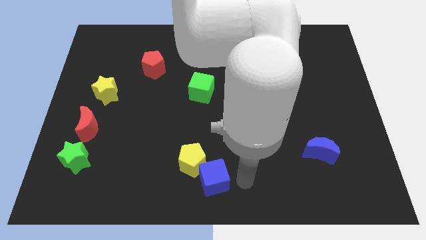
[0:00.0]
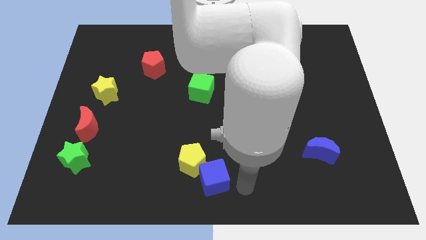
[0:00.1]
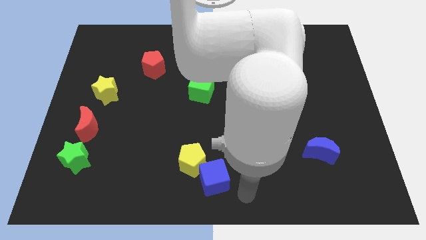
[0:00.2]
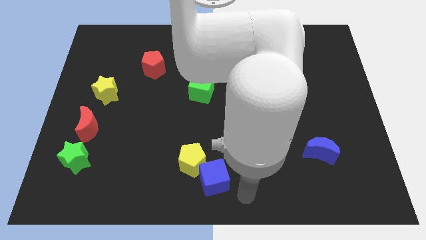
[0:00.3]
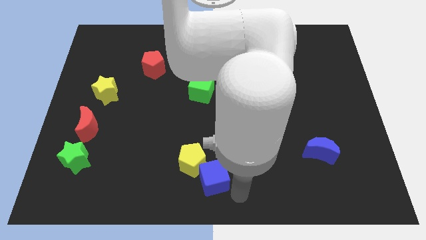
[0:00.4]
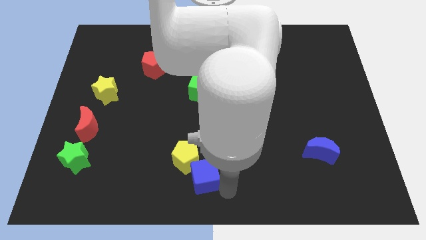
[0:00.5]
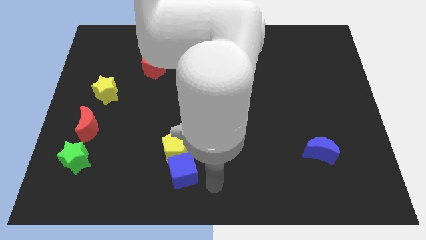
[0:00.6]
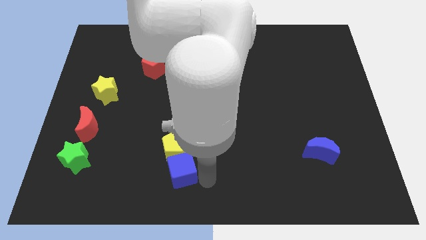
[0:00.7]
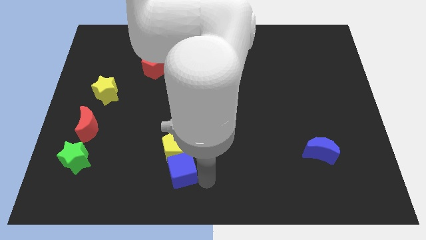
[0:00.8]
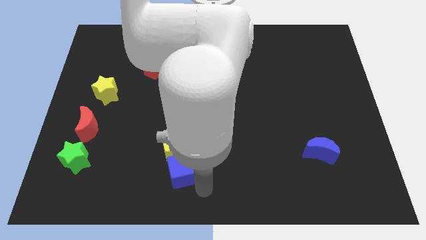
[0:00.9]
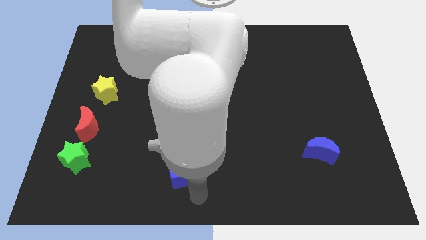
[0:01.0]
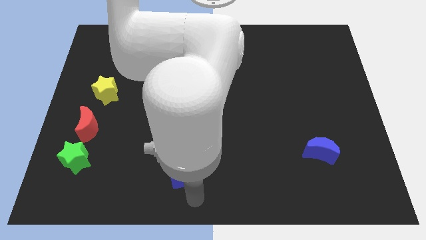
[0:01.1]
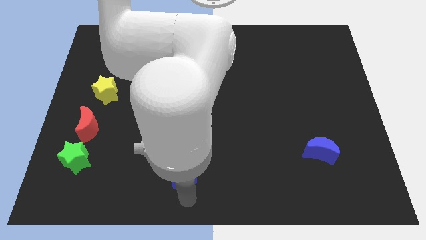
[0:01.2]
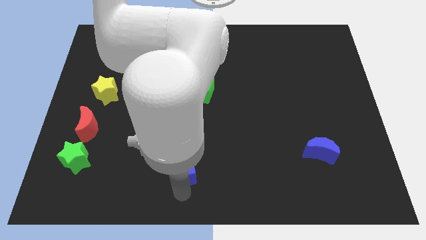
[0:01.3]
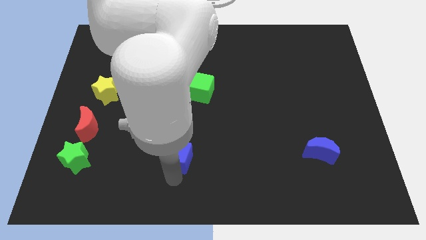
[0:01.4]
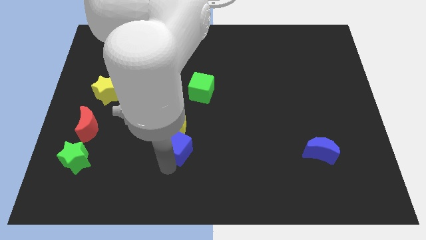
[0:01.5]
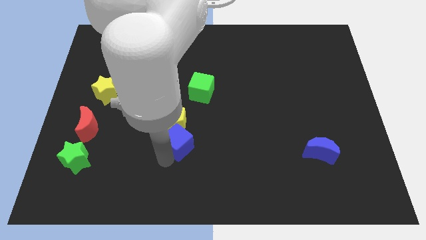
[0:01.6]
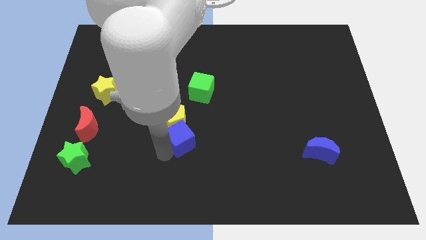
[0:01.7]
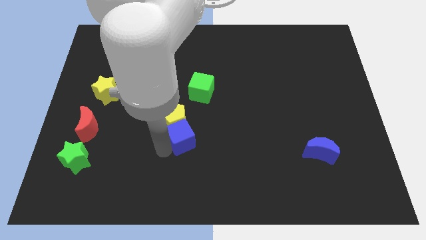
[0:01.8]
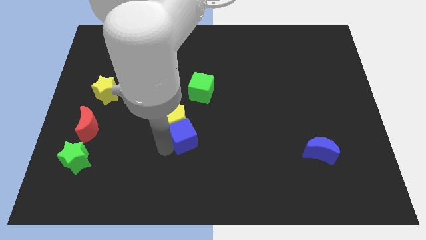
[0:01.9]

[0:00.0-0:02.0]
push the blue cube along with the yellow pentagon towards the center of the board

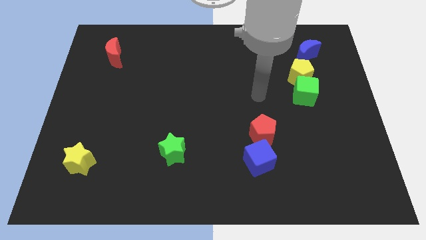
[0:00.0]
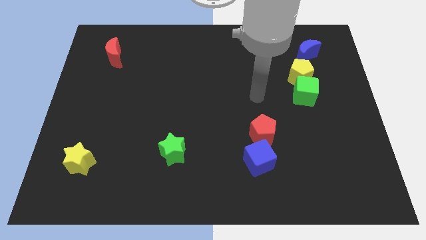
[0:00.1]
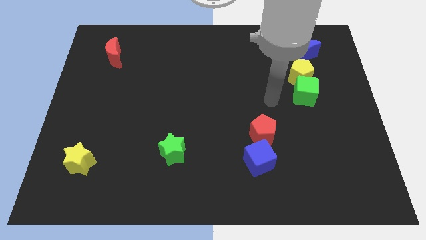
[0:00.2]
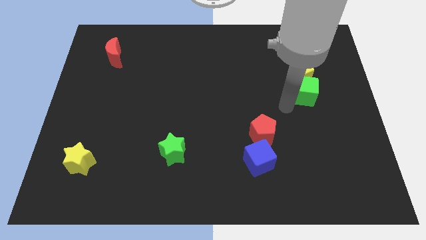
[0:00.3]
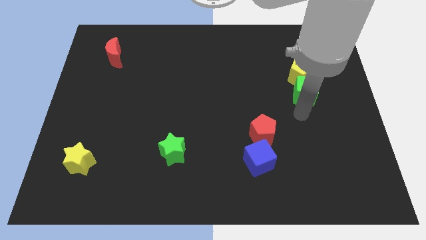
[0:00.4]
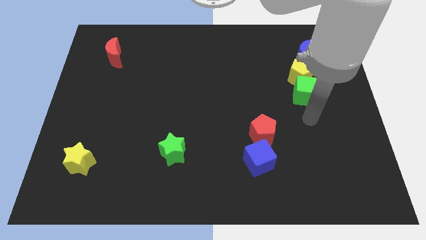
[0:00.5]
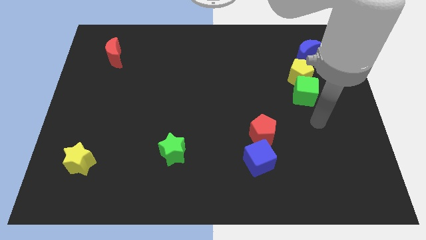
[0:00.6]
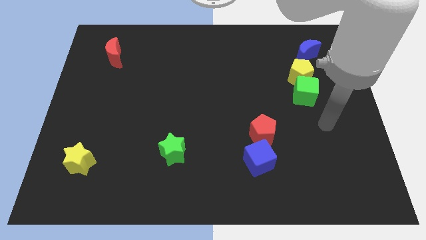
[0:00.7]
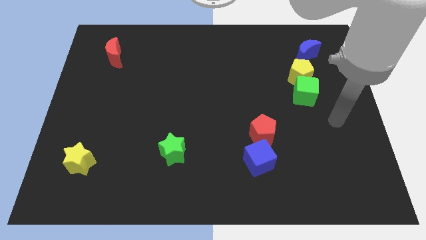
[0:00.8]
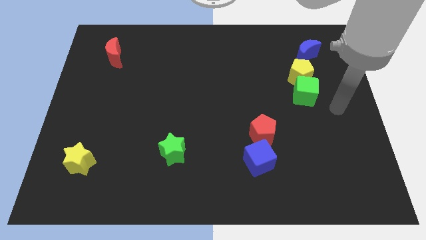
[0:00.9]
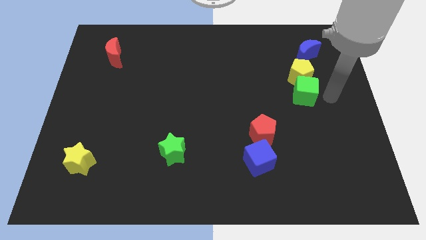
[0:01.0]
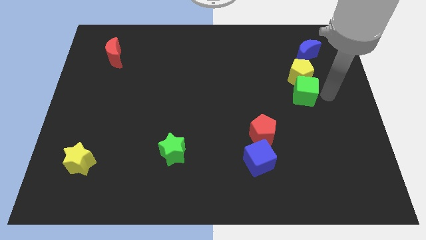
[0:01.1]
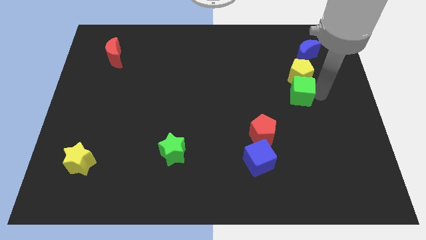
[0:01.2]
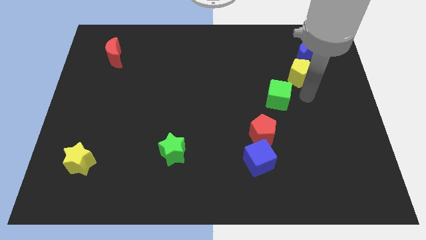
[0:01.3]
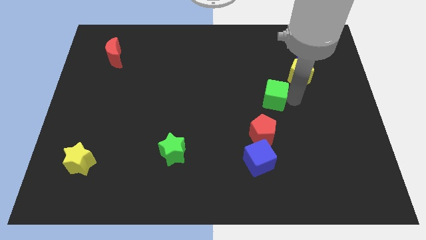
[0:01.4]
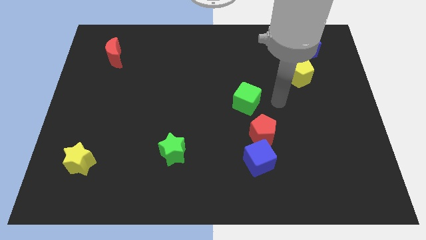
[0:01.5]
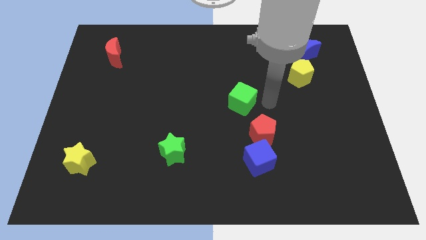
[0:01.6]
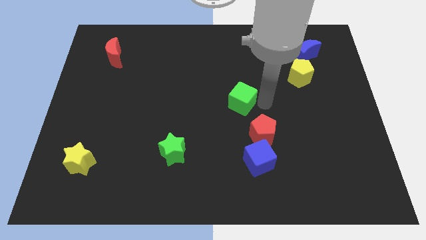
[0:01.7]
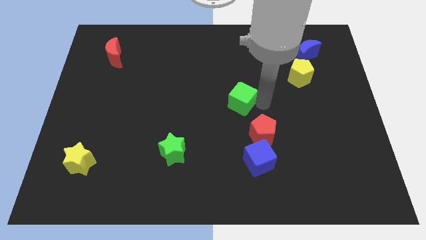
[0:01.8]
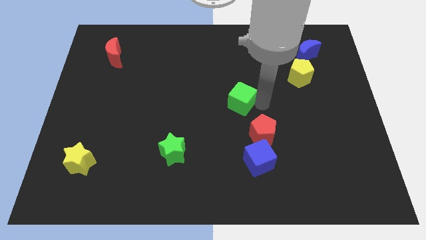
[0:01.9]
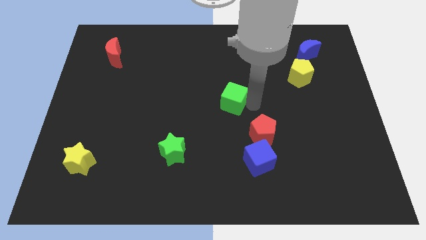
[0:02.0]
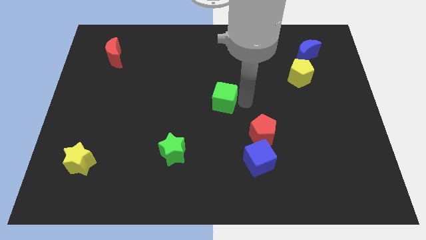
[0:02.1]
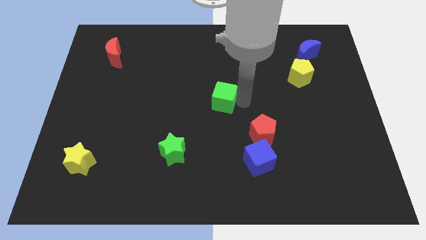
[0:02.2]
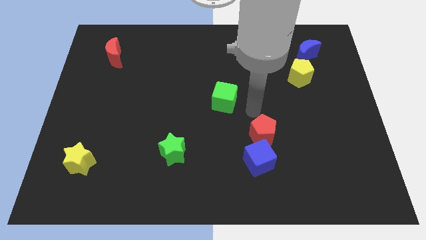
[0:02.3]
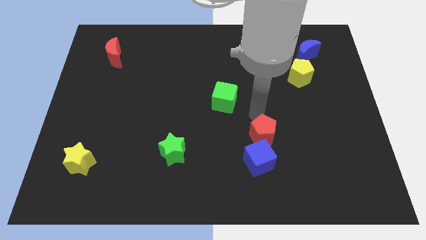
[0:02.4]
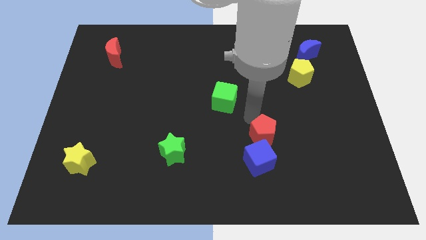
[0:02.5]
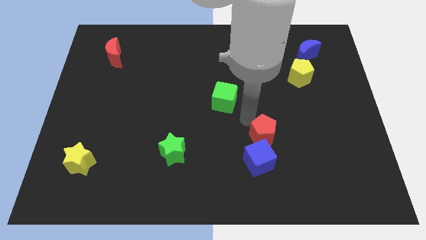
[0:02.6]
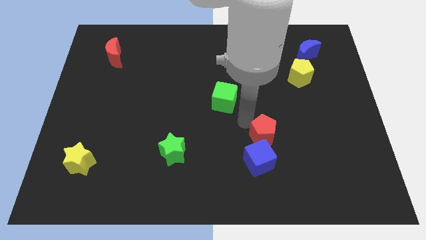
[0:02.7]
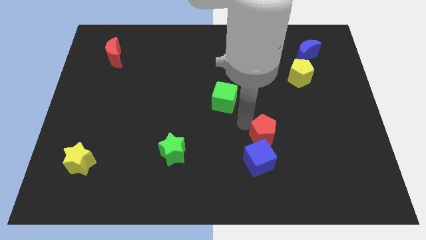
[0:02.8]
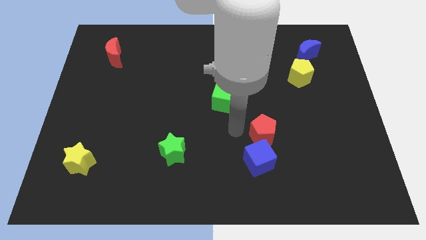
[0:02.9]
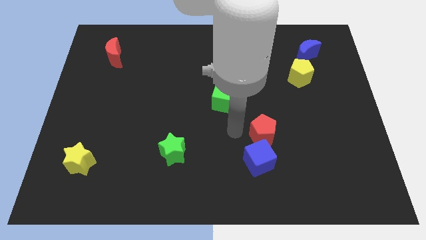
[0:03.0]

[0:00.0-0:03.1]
push green cube towards the center of board

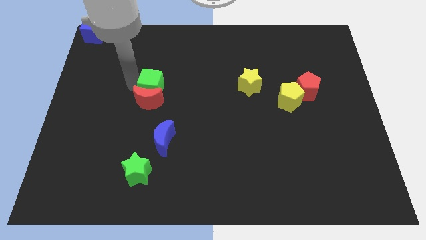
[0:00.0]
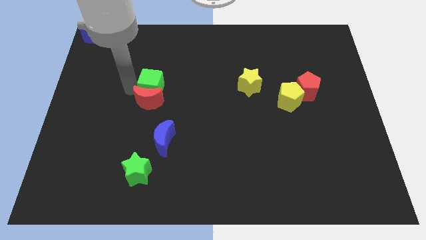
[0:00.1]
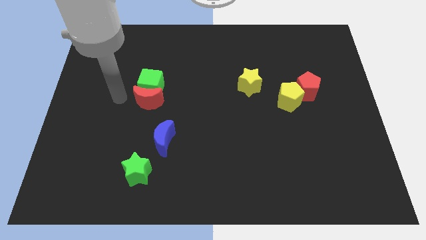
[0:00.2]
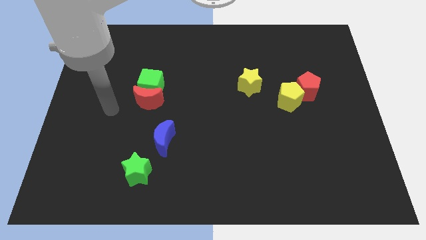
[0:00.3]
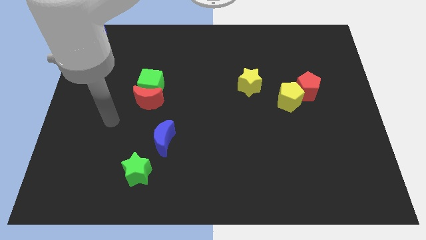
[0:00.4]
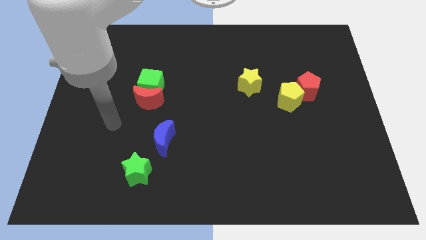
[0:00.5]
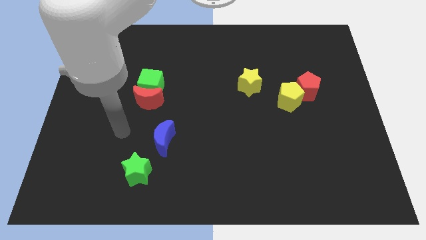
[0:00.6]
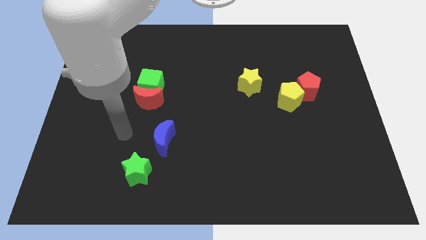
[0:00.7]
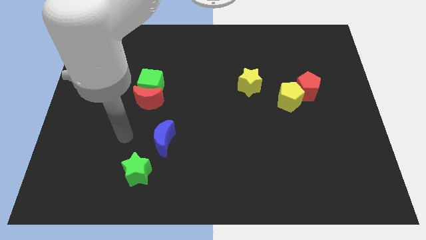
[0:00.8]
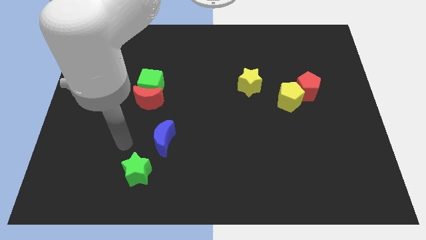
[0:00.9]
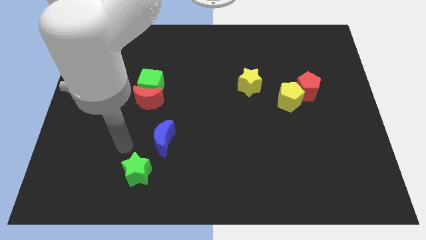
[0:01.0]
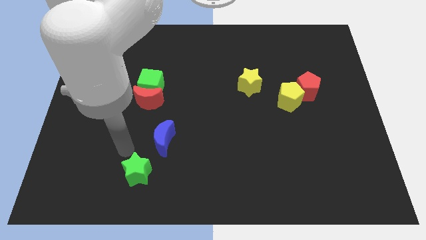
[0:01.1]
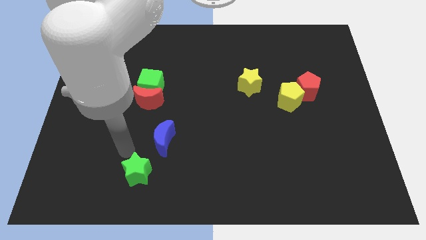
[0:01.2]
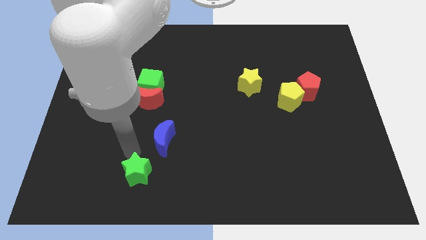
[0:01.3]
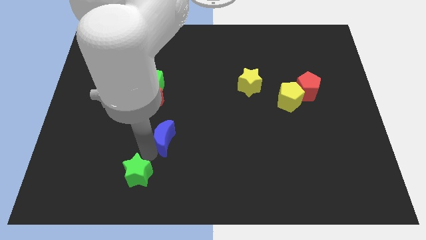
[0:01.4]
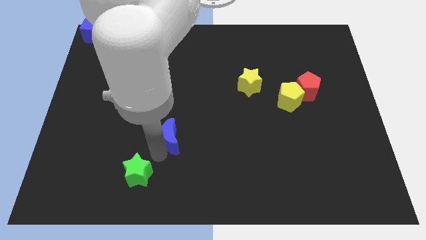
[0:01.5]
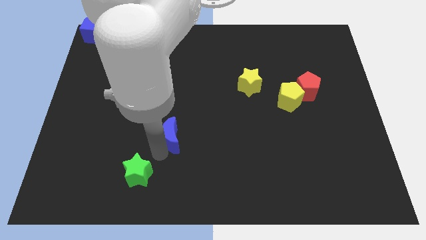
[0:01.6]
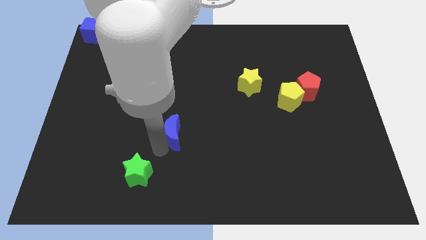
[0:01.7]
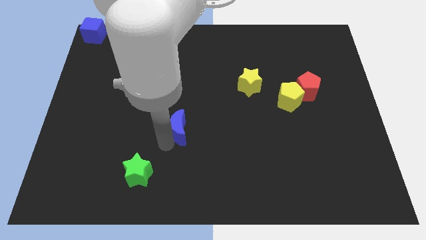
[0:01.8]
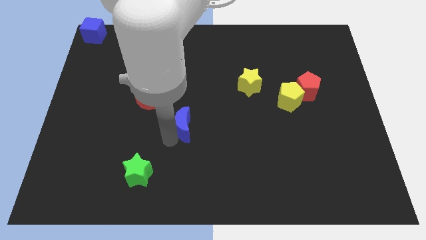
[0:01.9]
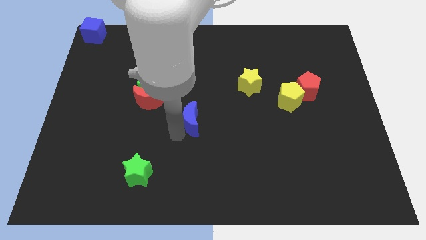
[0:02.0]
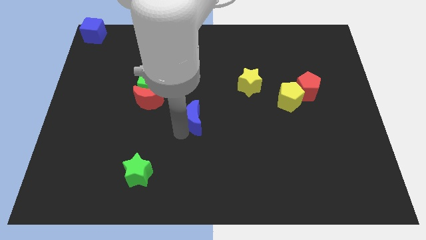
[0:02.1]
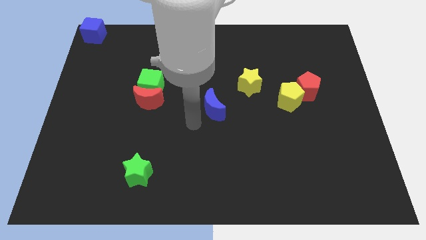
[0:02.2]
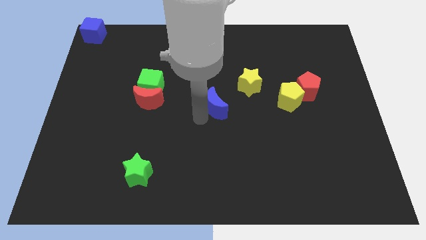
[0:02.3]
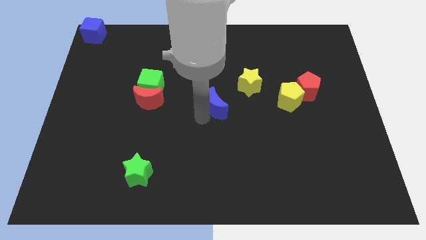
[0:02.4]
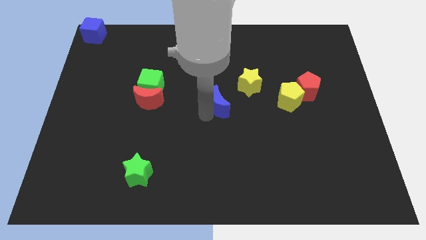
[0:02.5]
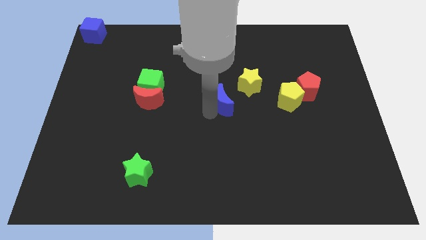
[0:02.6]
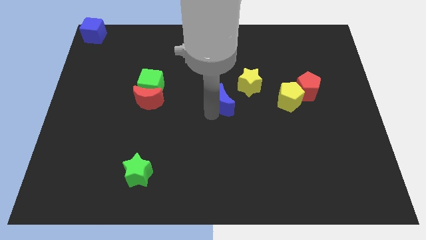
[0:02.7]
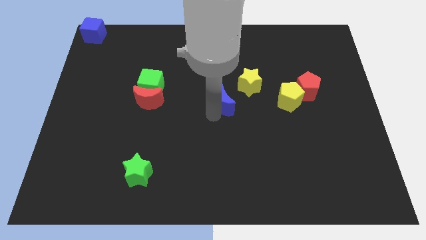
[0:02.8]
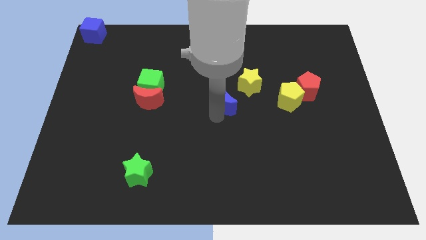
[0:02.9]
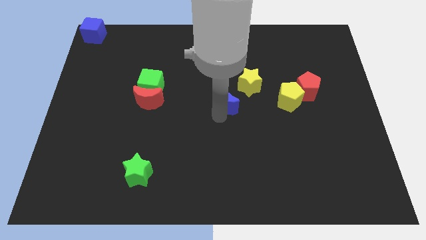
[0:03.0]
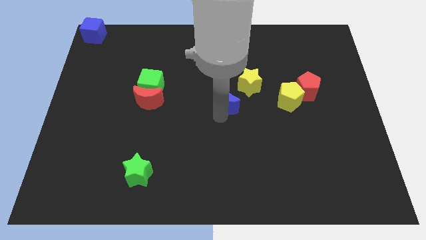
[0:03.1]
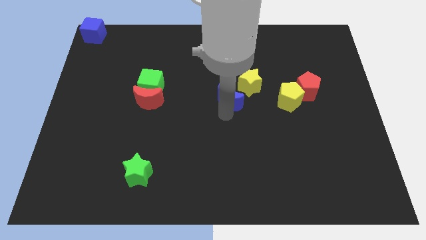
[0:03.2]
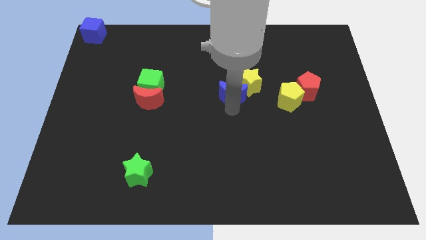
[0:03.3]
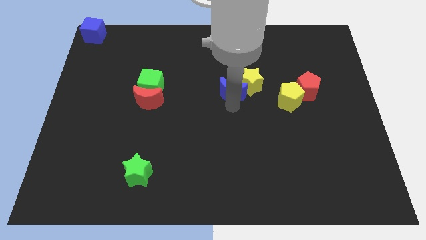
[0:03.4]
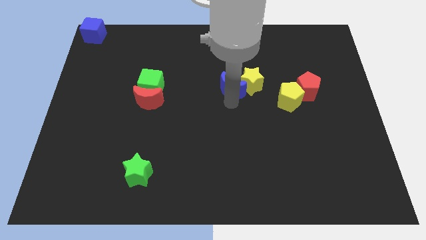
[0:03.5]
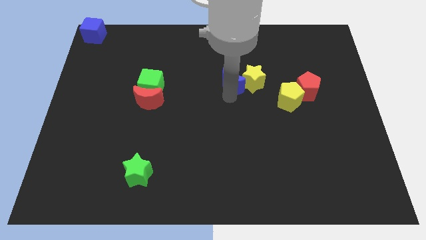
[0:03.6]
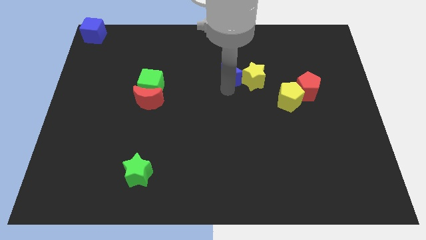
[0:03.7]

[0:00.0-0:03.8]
push the blue crescent to the left of the yellow star
